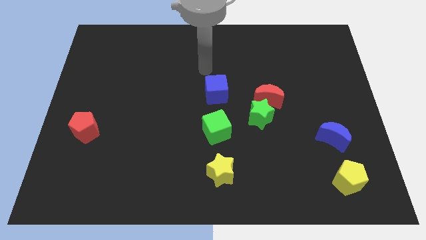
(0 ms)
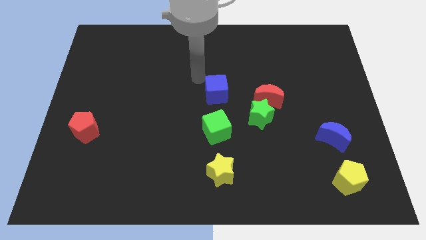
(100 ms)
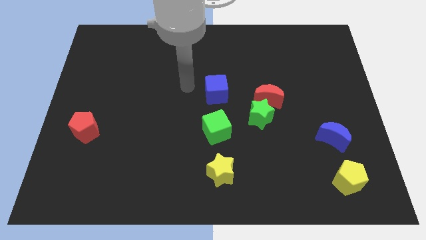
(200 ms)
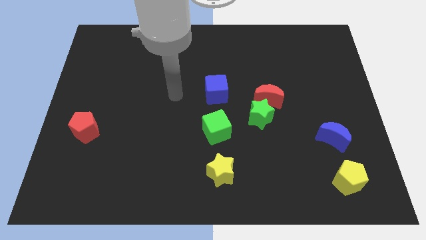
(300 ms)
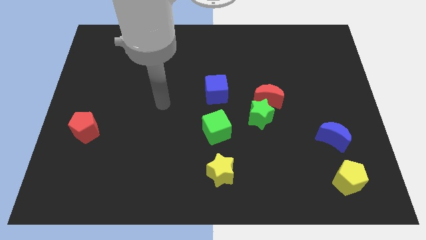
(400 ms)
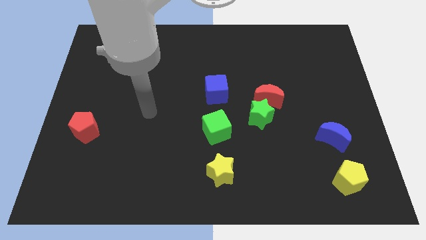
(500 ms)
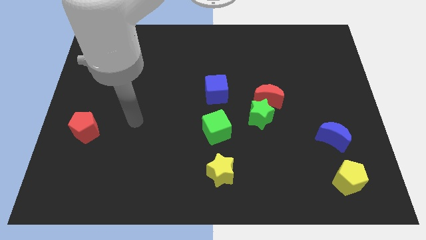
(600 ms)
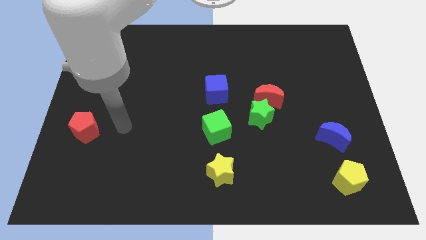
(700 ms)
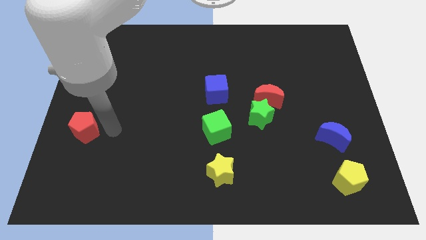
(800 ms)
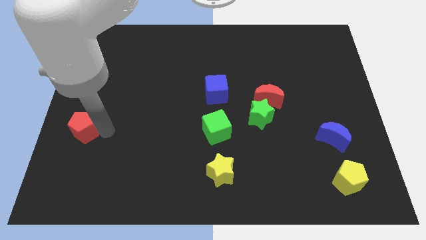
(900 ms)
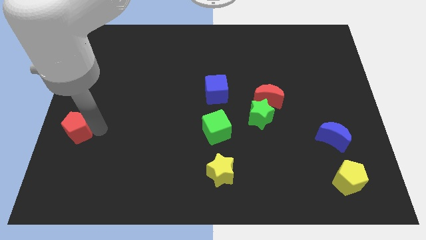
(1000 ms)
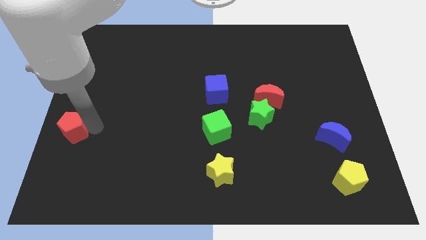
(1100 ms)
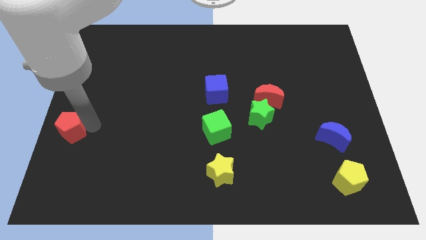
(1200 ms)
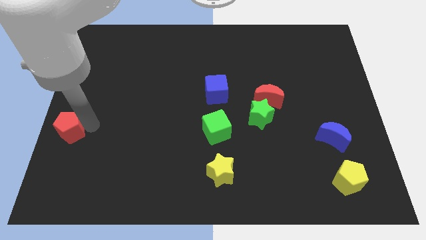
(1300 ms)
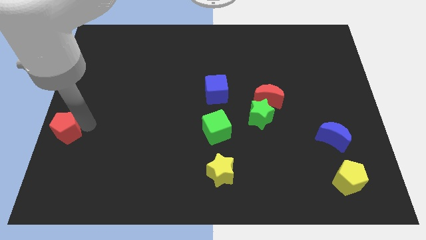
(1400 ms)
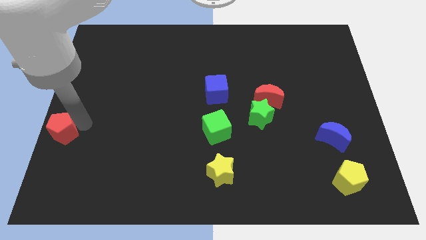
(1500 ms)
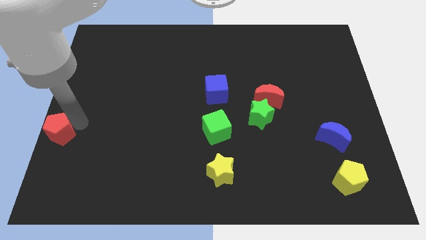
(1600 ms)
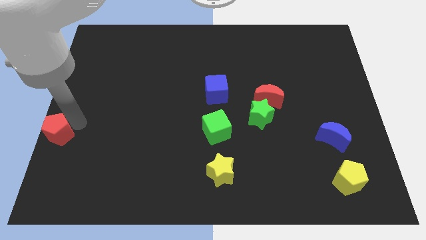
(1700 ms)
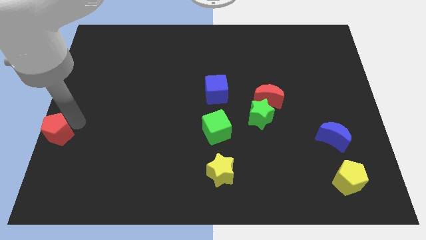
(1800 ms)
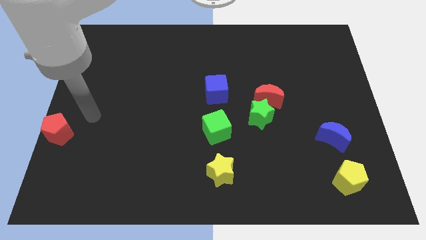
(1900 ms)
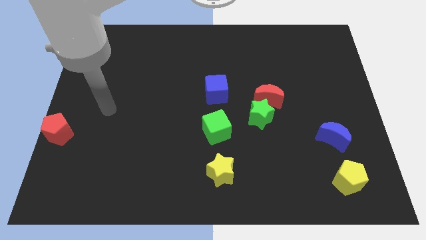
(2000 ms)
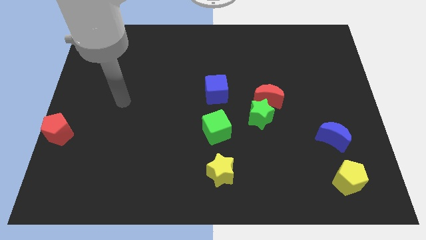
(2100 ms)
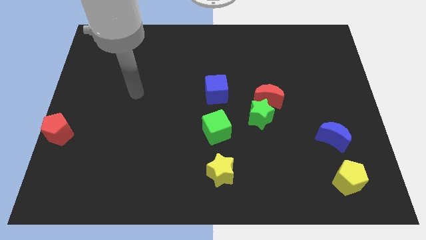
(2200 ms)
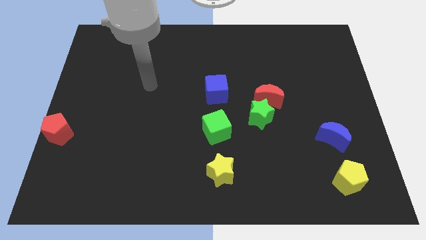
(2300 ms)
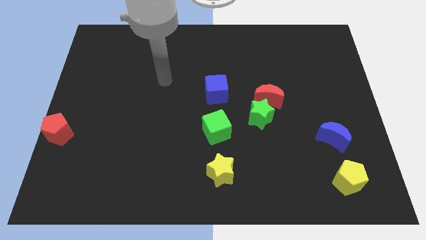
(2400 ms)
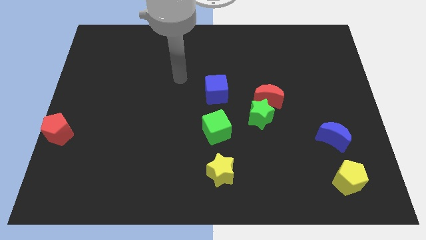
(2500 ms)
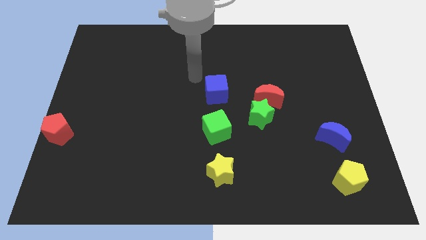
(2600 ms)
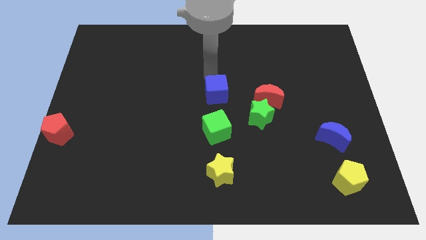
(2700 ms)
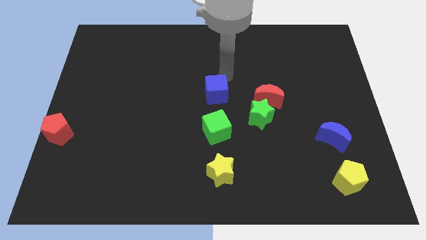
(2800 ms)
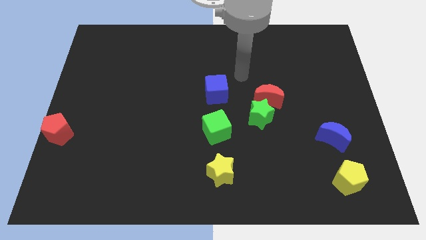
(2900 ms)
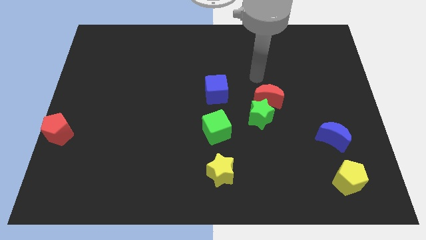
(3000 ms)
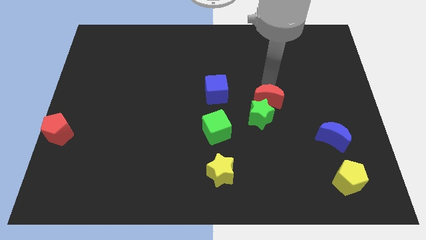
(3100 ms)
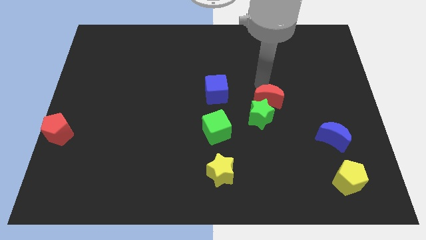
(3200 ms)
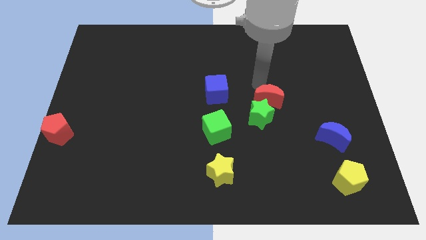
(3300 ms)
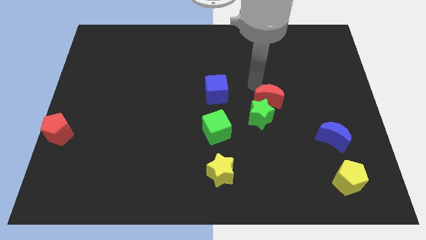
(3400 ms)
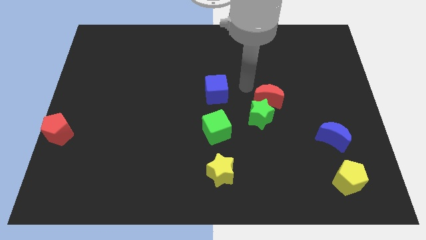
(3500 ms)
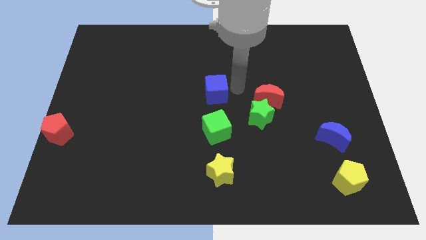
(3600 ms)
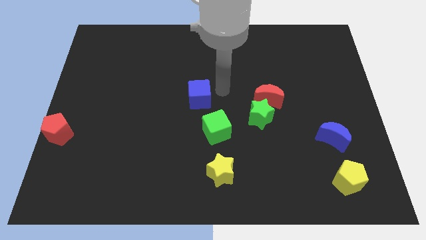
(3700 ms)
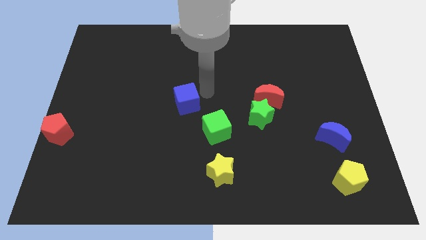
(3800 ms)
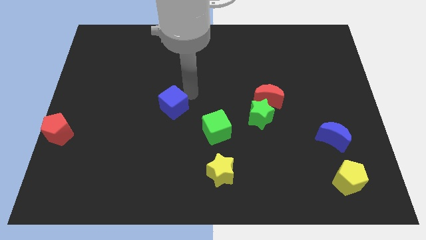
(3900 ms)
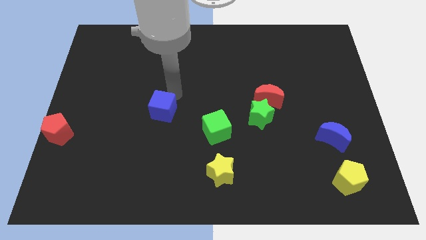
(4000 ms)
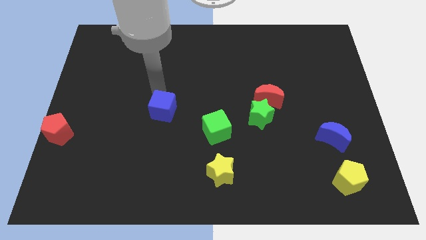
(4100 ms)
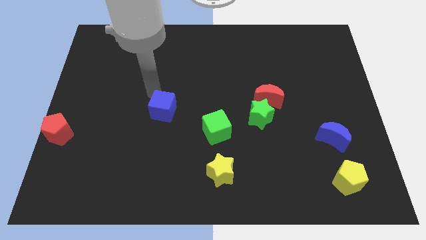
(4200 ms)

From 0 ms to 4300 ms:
move blue cube towards the left side of the board

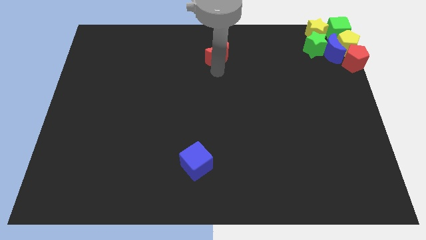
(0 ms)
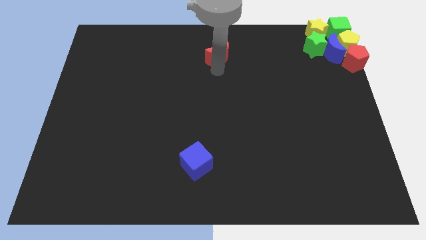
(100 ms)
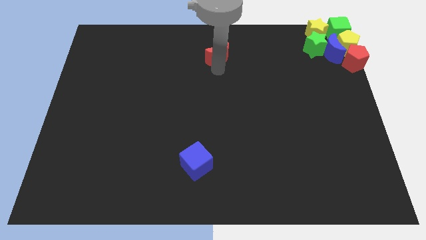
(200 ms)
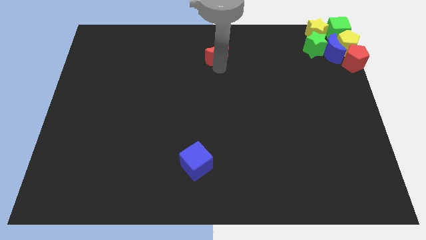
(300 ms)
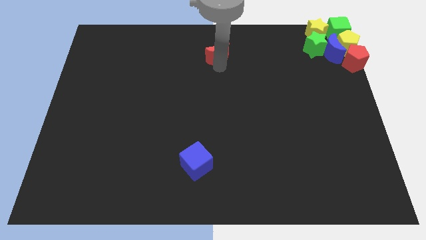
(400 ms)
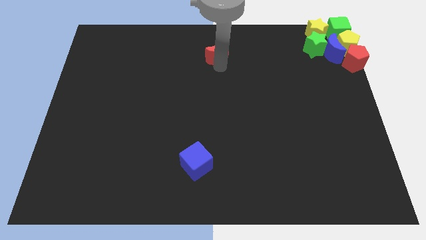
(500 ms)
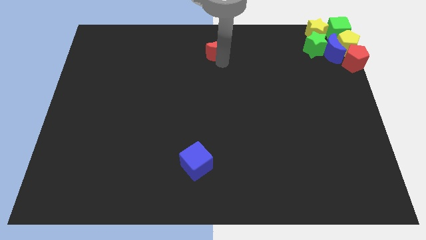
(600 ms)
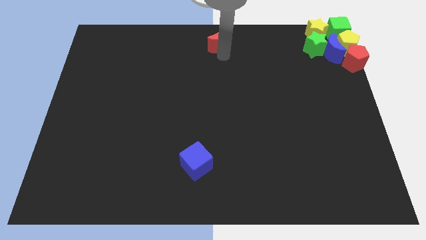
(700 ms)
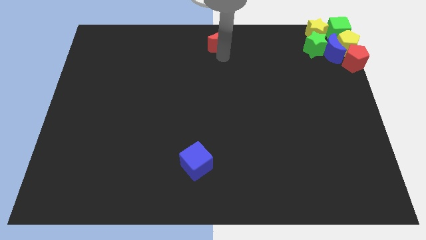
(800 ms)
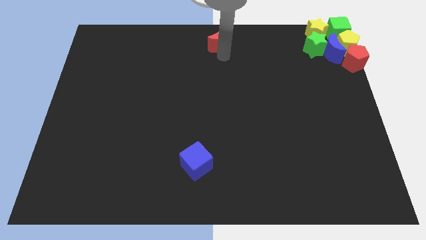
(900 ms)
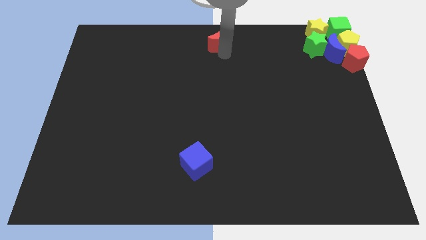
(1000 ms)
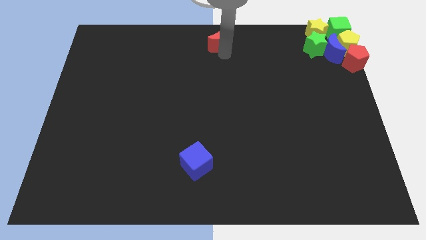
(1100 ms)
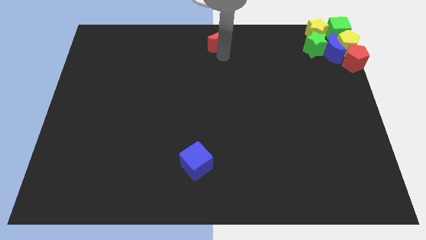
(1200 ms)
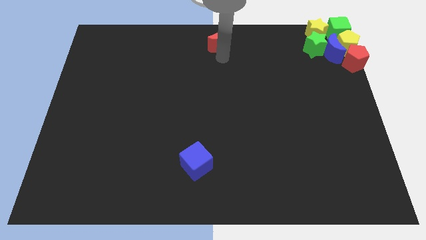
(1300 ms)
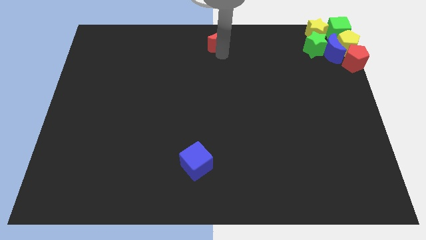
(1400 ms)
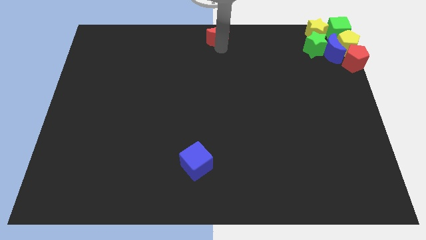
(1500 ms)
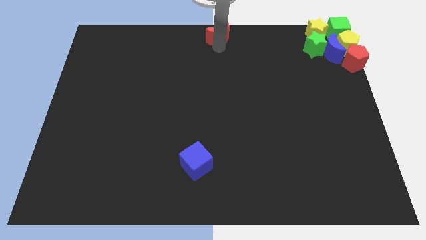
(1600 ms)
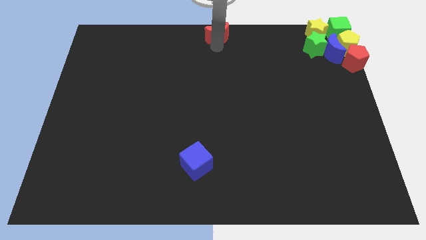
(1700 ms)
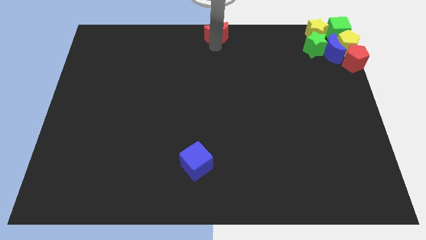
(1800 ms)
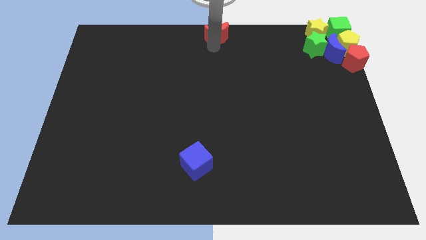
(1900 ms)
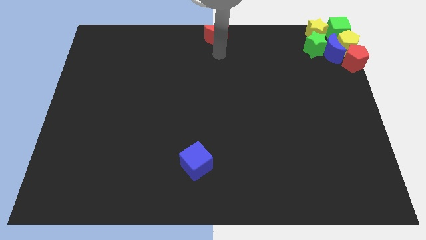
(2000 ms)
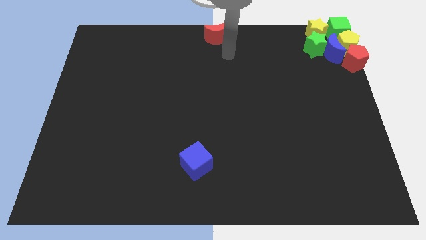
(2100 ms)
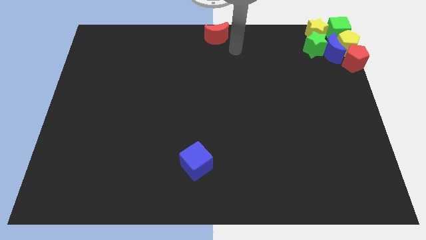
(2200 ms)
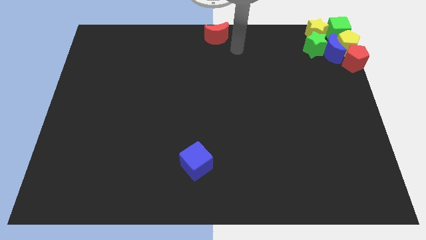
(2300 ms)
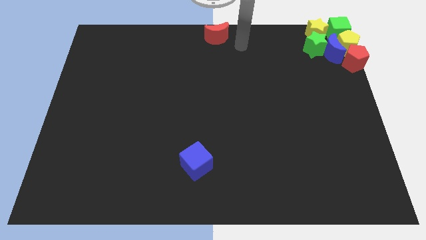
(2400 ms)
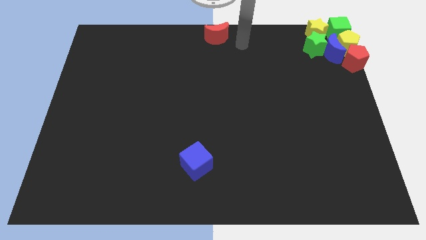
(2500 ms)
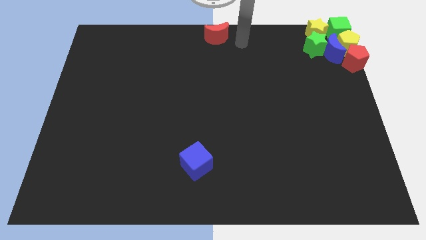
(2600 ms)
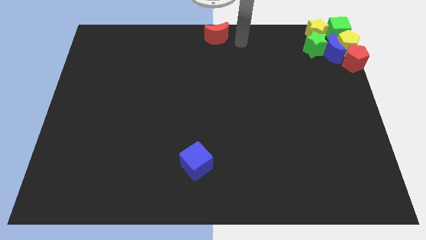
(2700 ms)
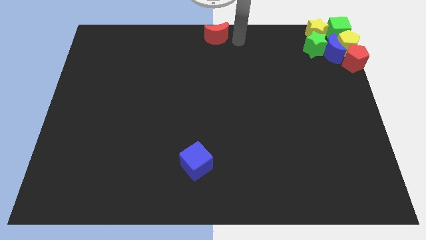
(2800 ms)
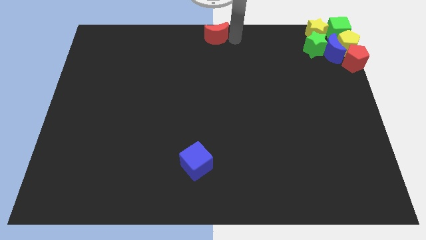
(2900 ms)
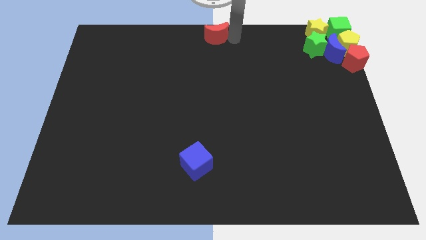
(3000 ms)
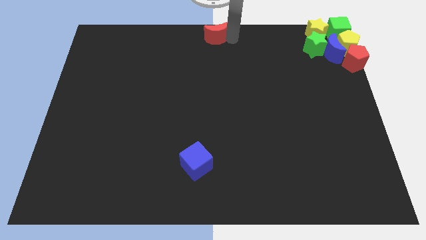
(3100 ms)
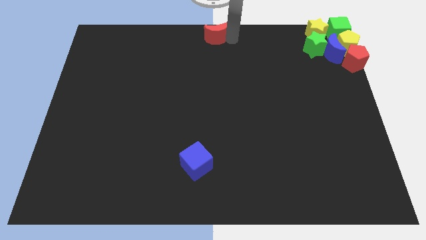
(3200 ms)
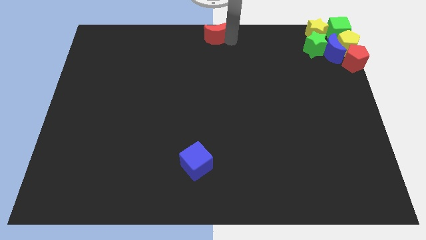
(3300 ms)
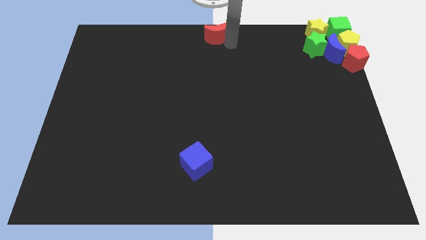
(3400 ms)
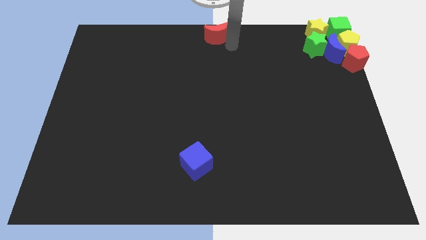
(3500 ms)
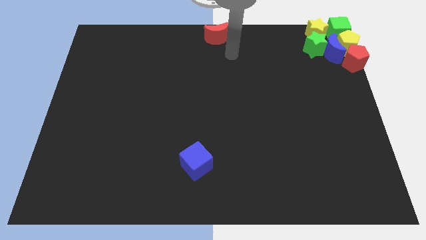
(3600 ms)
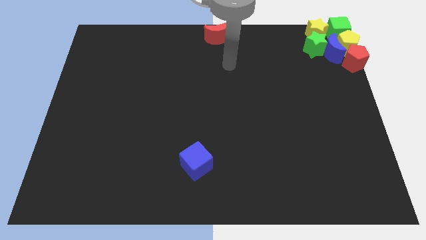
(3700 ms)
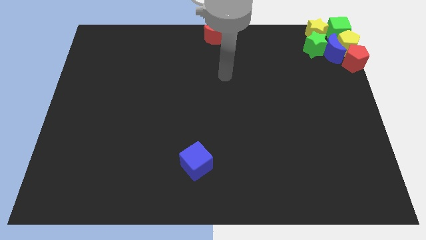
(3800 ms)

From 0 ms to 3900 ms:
move the red crescent to the top center

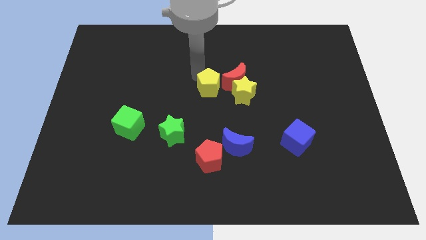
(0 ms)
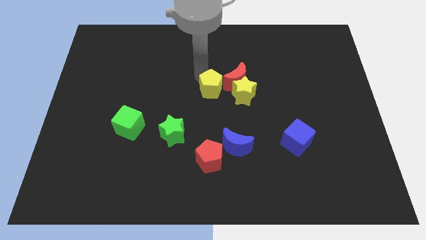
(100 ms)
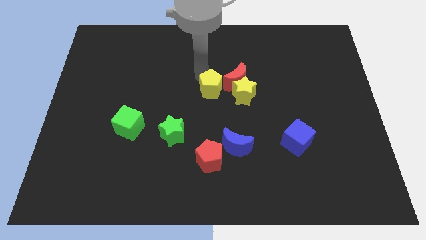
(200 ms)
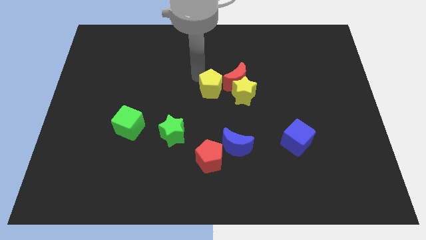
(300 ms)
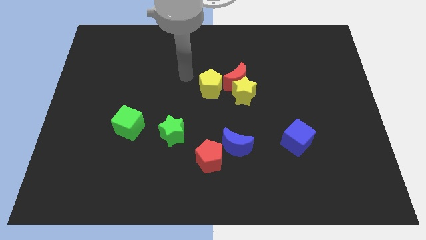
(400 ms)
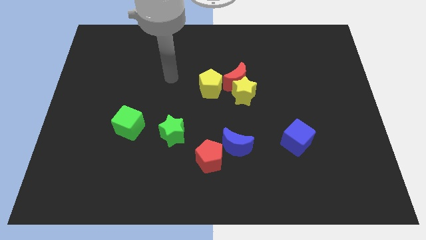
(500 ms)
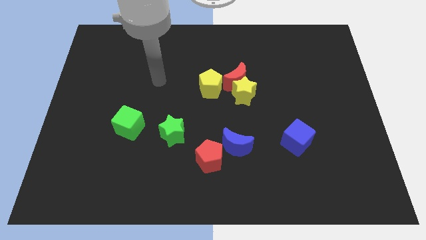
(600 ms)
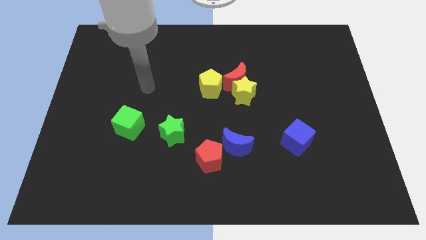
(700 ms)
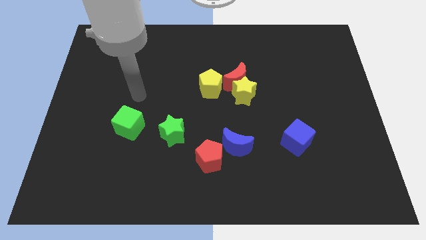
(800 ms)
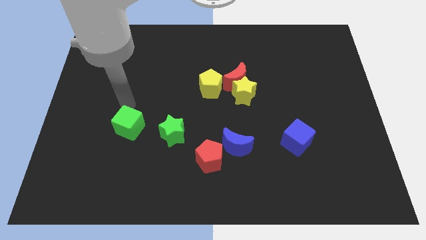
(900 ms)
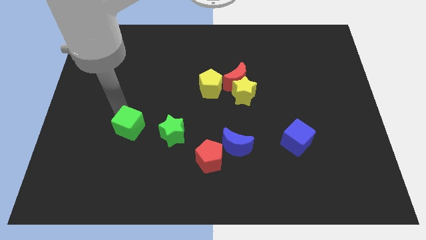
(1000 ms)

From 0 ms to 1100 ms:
adjust the yellow pentagon slightly into the reed crescent from the left
